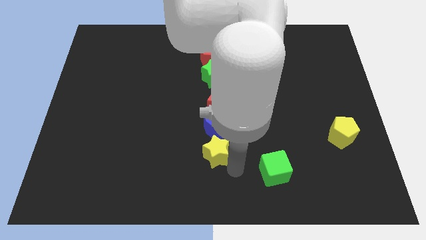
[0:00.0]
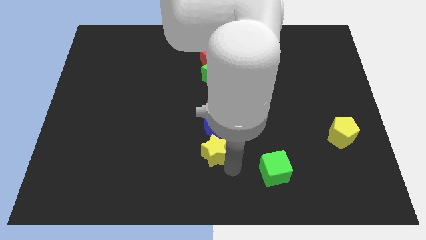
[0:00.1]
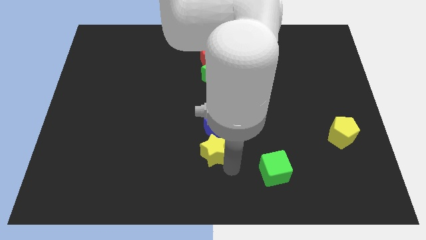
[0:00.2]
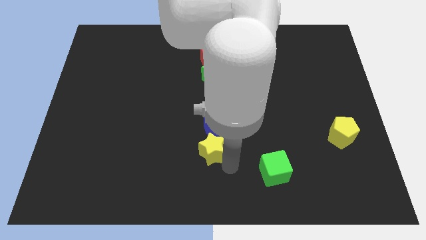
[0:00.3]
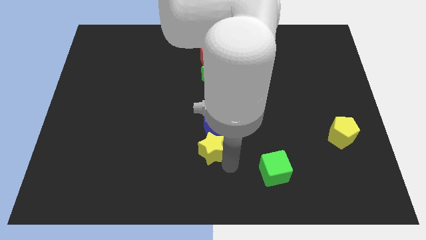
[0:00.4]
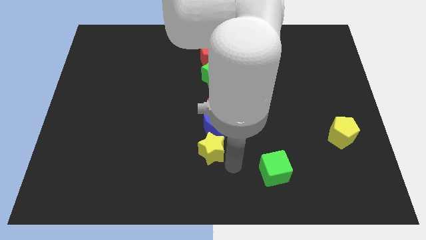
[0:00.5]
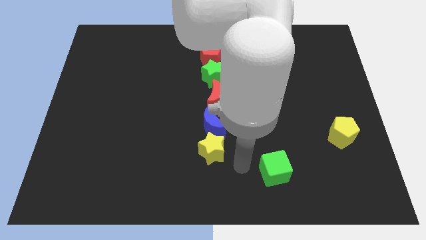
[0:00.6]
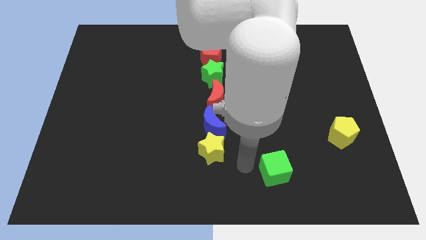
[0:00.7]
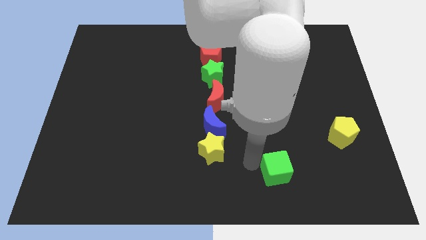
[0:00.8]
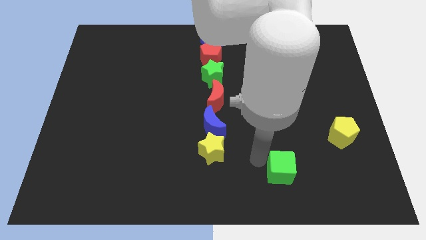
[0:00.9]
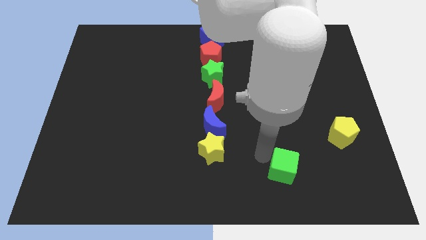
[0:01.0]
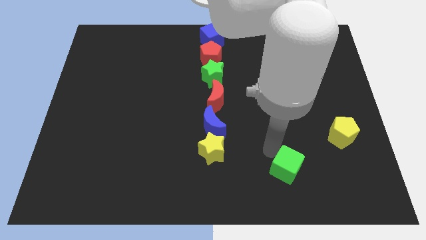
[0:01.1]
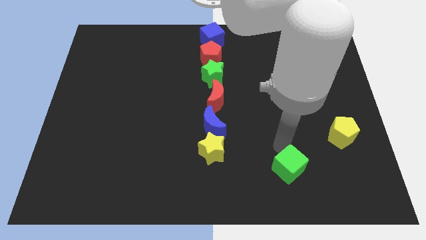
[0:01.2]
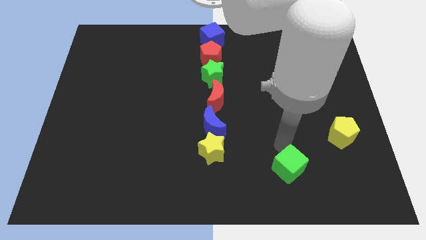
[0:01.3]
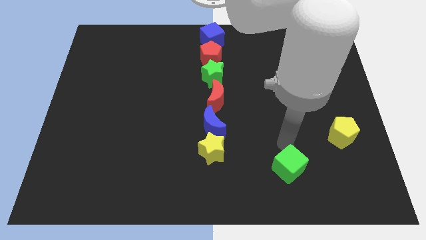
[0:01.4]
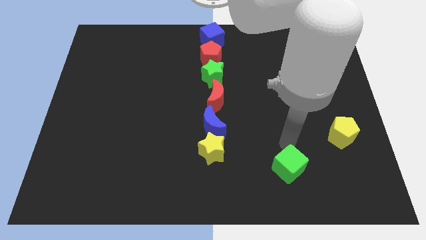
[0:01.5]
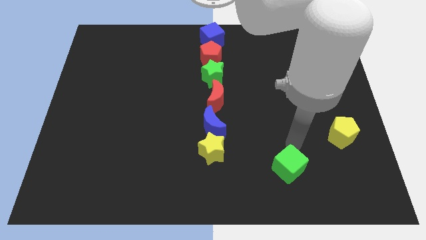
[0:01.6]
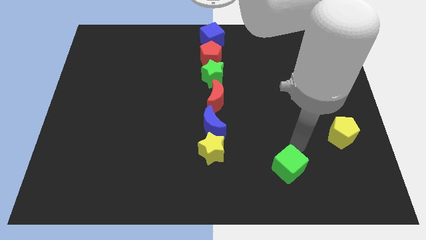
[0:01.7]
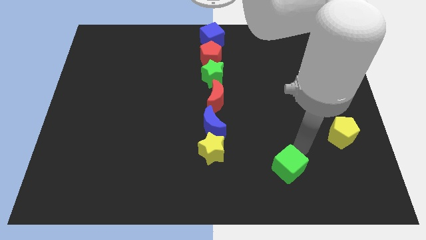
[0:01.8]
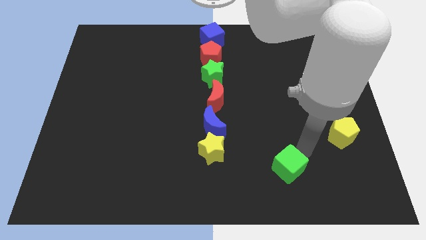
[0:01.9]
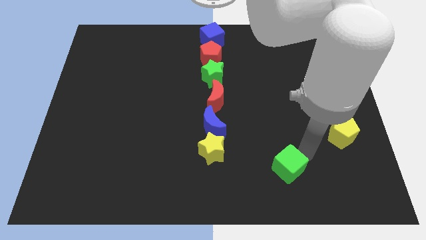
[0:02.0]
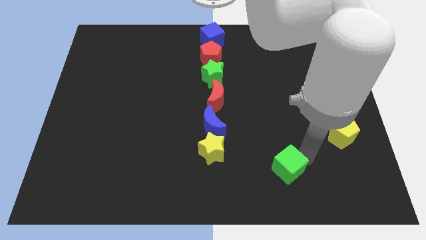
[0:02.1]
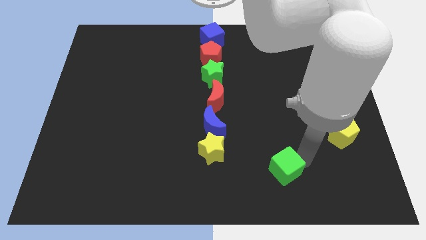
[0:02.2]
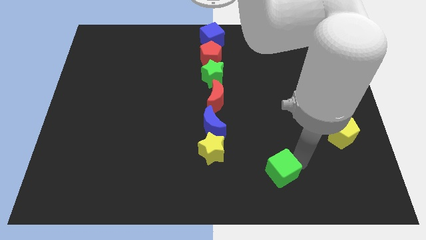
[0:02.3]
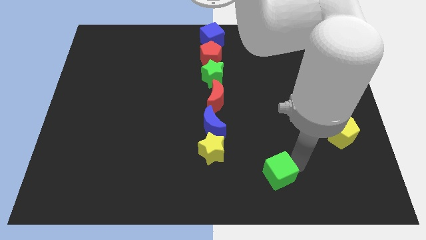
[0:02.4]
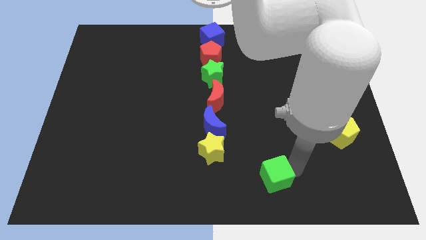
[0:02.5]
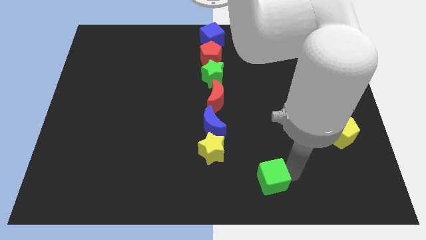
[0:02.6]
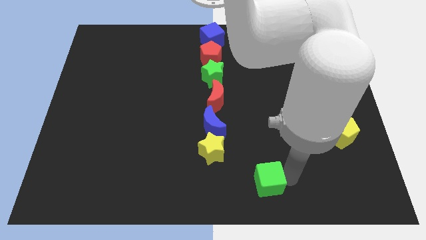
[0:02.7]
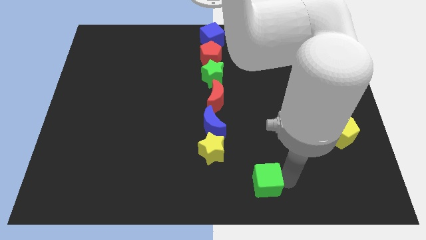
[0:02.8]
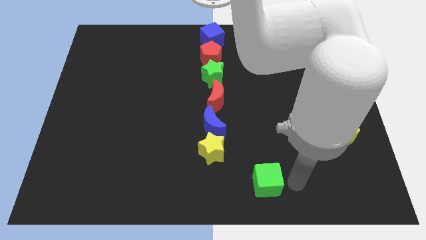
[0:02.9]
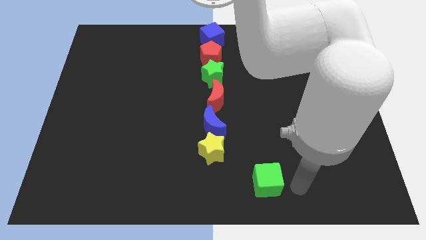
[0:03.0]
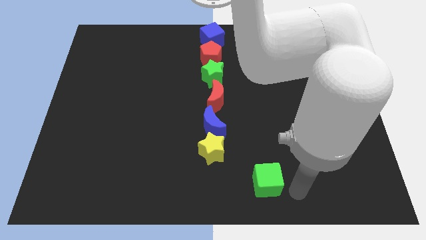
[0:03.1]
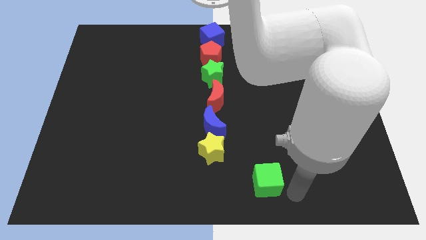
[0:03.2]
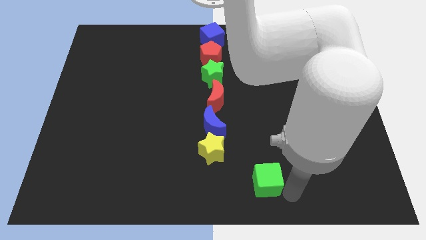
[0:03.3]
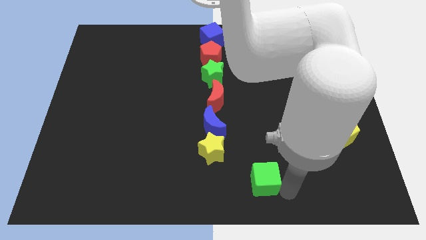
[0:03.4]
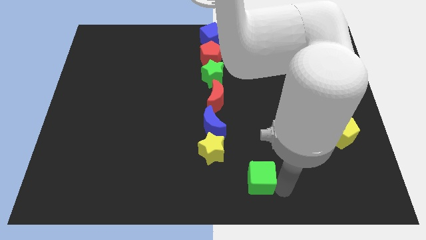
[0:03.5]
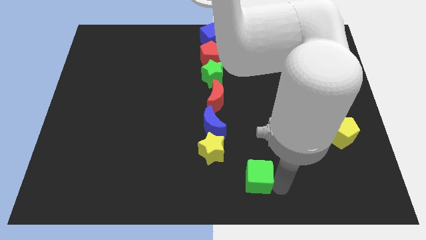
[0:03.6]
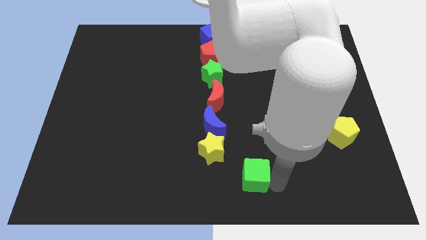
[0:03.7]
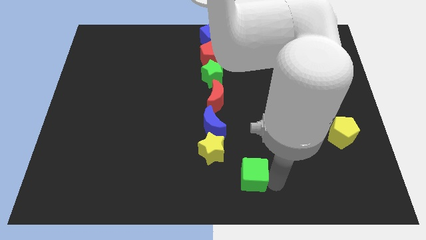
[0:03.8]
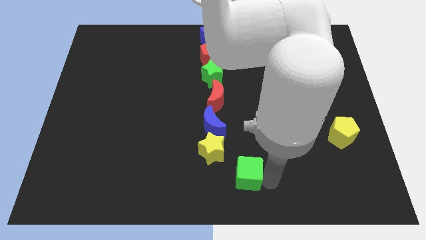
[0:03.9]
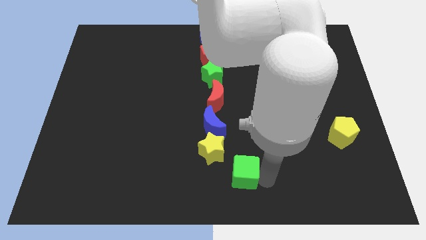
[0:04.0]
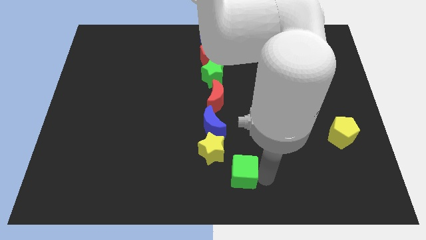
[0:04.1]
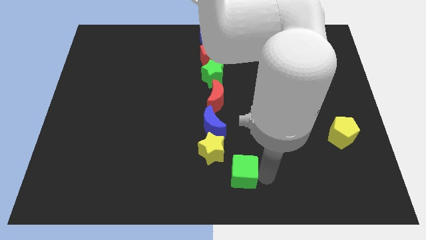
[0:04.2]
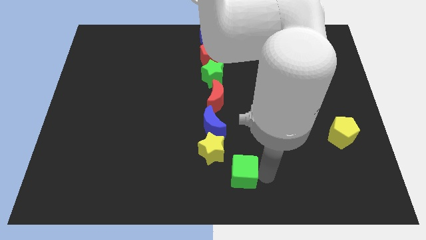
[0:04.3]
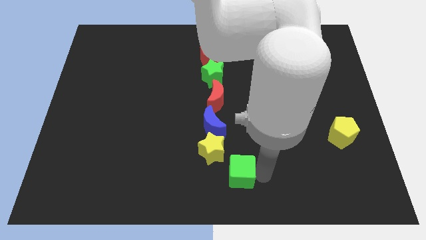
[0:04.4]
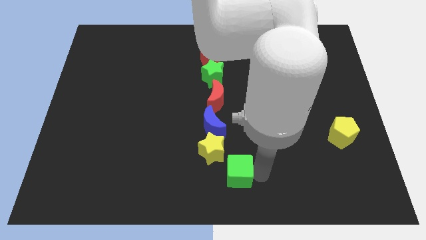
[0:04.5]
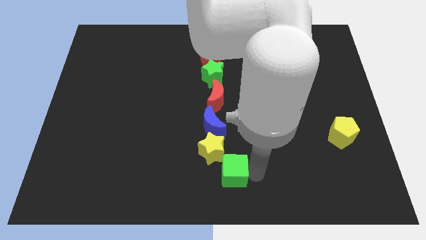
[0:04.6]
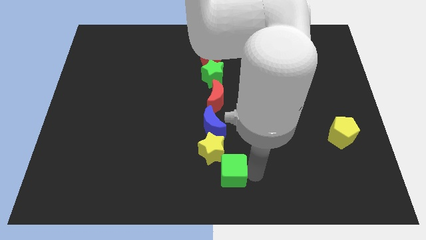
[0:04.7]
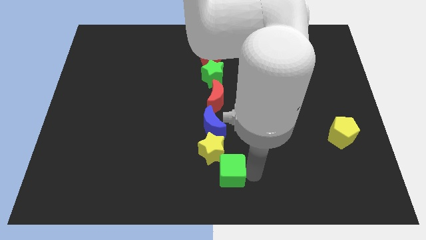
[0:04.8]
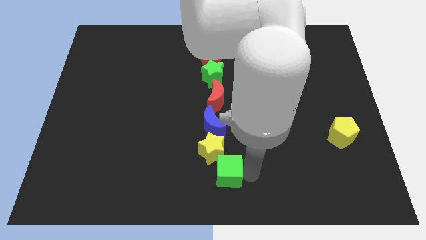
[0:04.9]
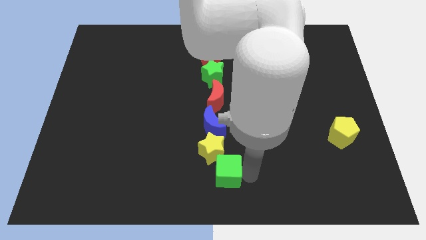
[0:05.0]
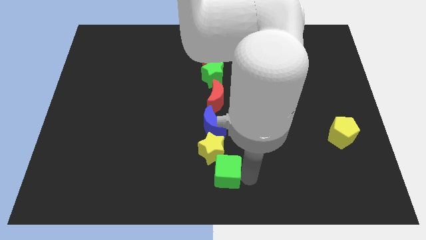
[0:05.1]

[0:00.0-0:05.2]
move the green cube slightly towards the left side

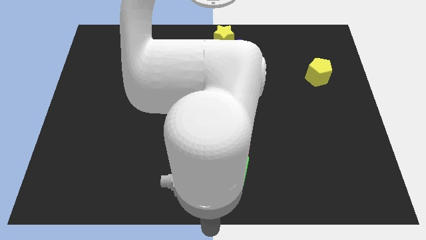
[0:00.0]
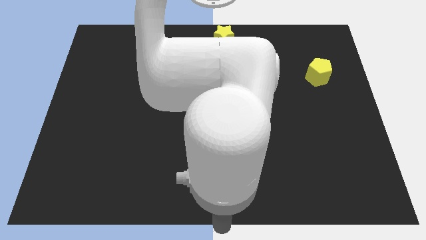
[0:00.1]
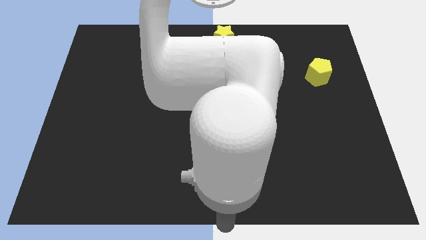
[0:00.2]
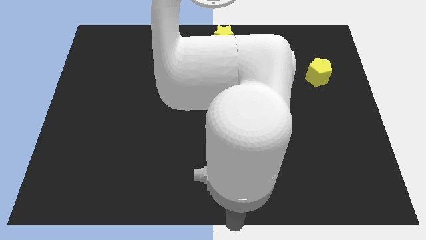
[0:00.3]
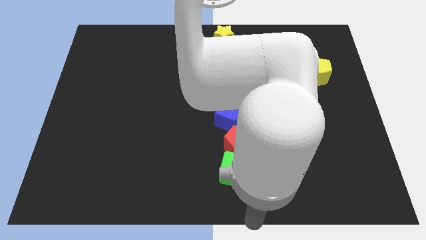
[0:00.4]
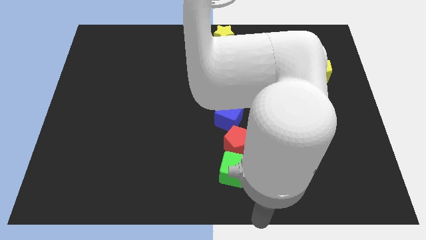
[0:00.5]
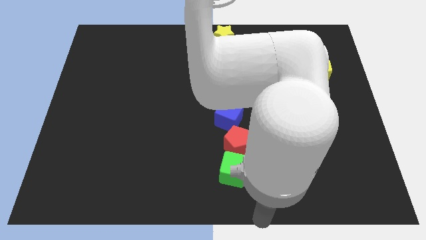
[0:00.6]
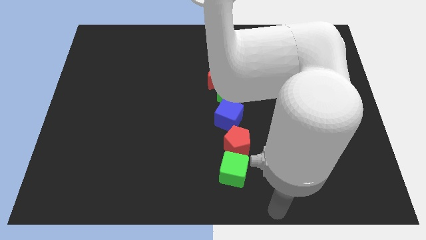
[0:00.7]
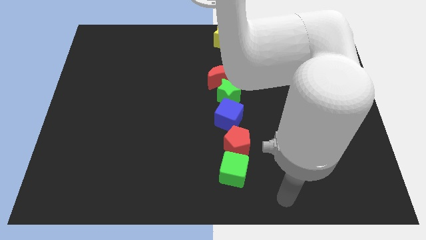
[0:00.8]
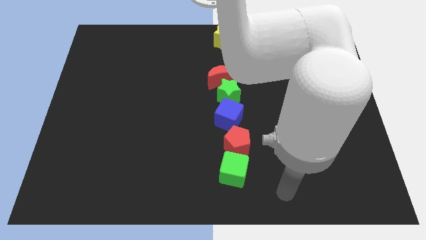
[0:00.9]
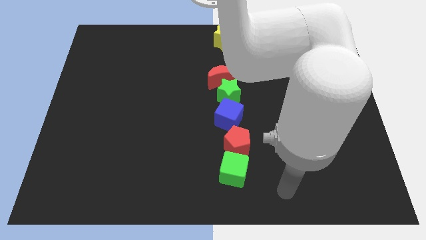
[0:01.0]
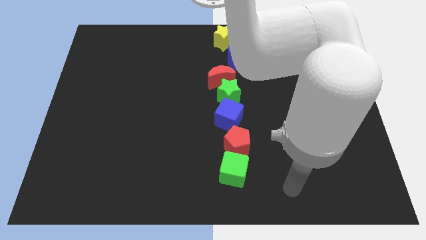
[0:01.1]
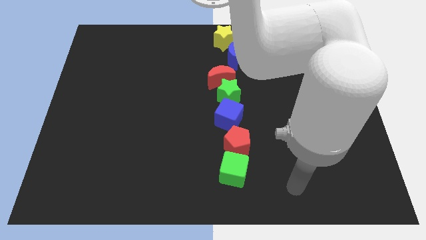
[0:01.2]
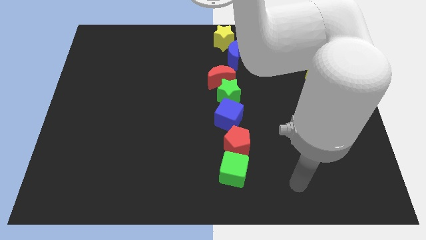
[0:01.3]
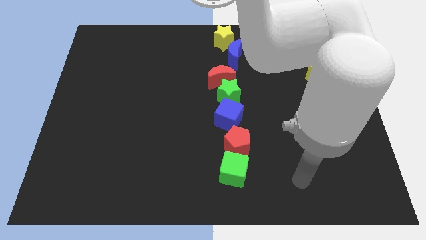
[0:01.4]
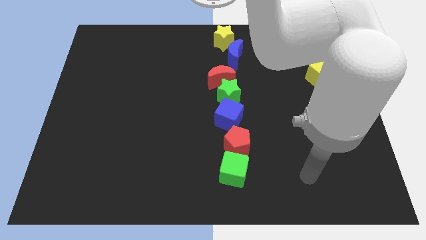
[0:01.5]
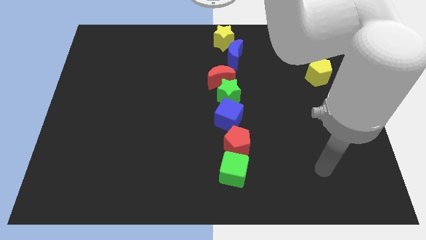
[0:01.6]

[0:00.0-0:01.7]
move your arm to the right of green cube

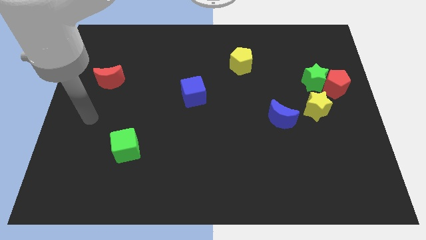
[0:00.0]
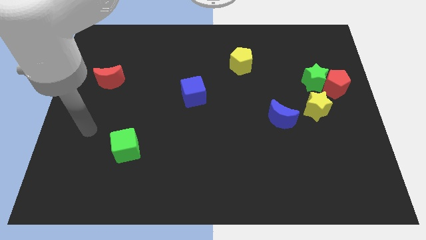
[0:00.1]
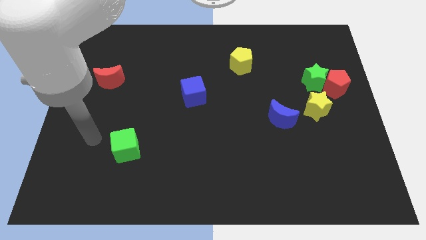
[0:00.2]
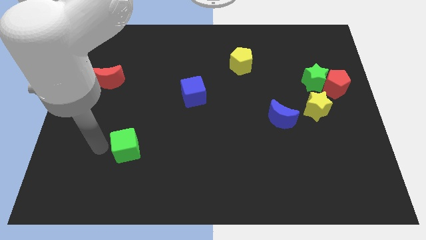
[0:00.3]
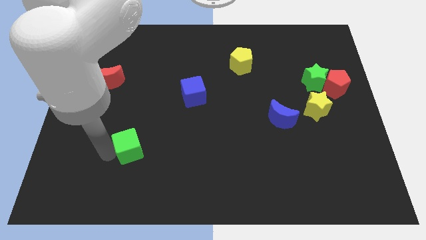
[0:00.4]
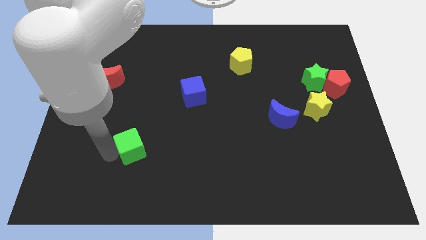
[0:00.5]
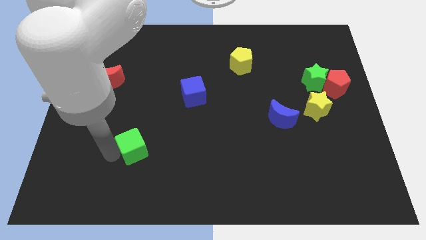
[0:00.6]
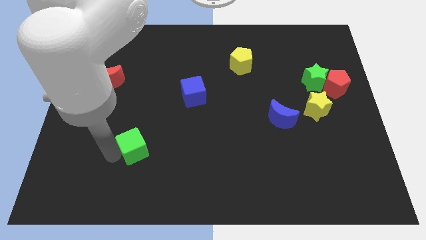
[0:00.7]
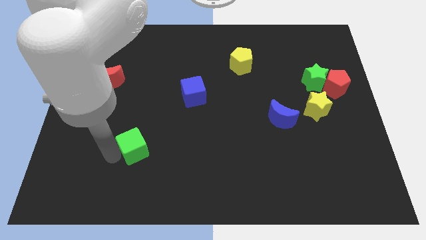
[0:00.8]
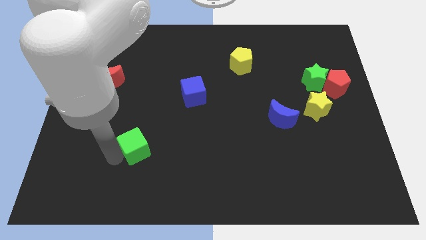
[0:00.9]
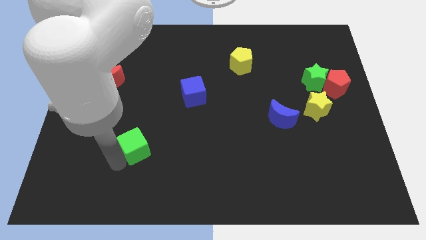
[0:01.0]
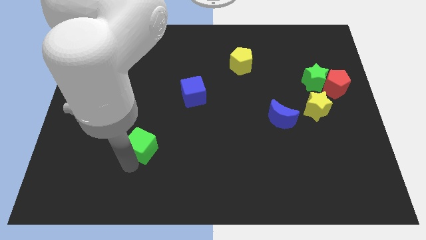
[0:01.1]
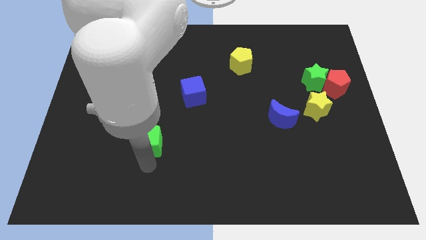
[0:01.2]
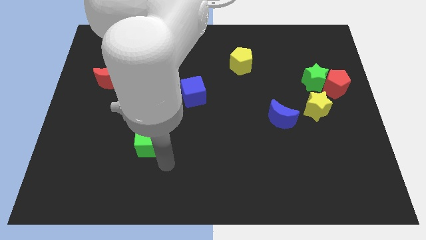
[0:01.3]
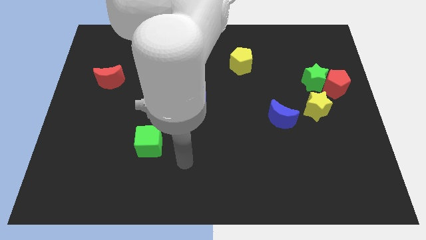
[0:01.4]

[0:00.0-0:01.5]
move the green cube slightly to the right

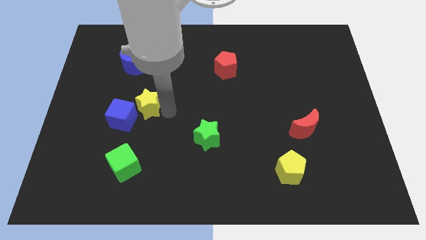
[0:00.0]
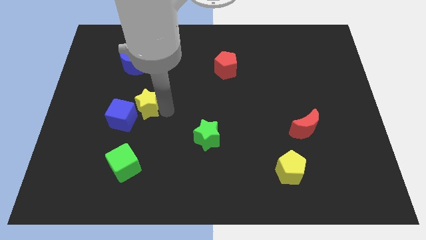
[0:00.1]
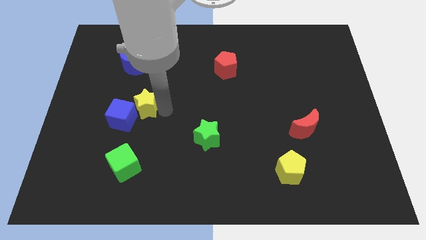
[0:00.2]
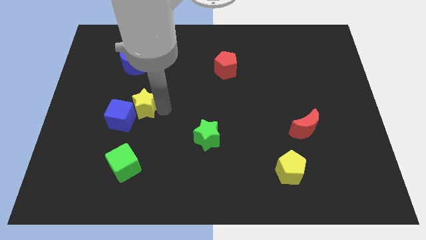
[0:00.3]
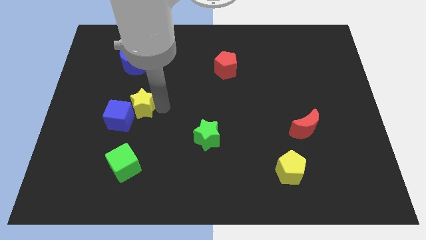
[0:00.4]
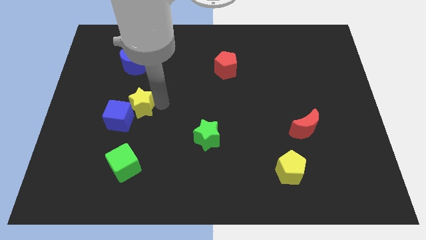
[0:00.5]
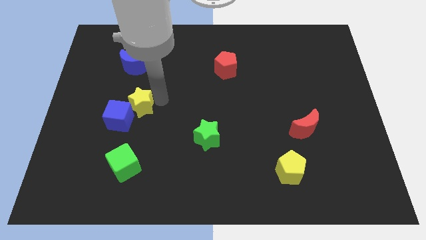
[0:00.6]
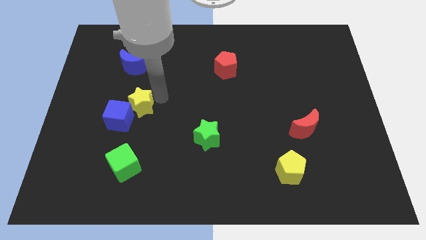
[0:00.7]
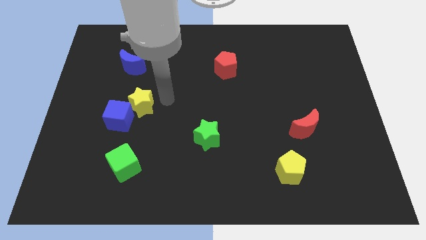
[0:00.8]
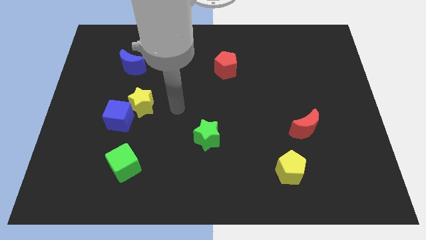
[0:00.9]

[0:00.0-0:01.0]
push the yellow star into the blue cube
